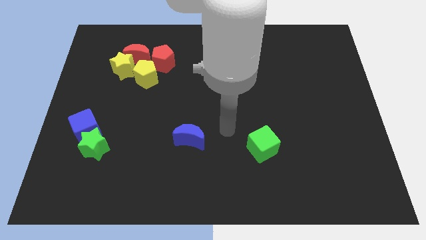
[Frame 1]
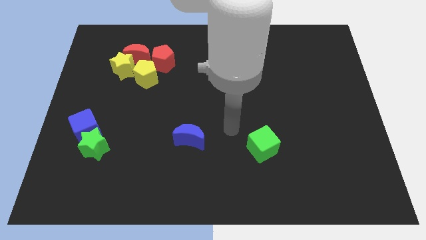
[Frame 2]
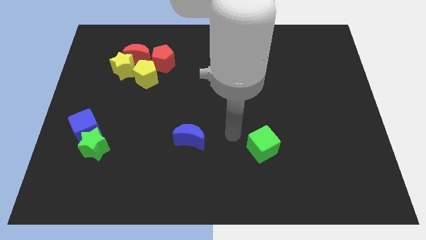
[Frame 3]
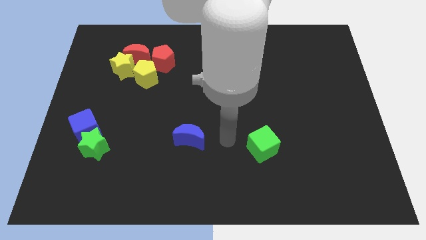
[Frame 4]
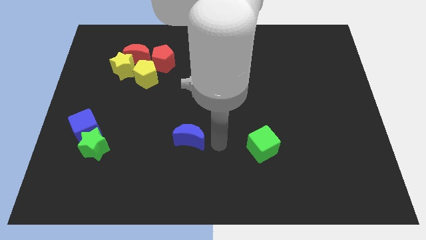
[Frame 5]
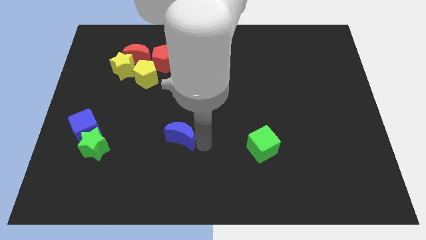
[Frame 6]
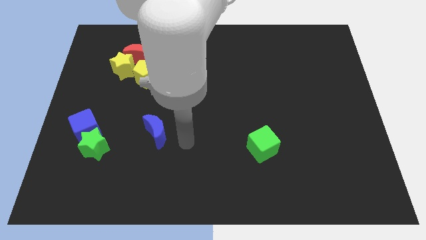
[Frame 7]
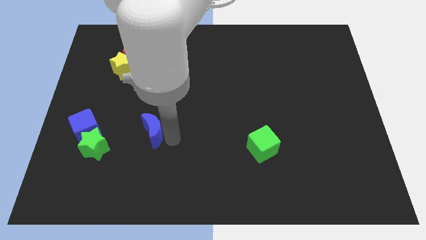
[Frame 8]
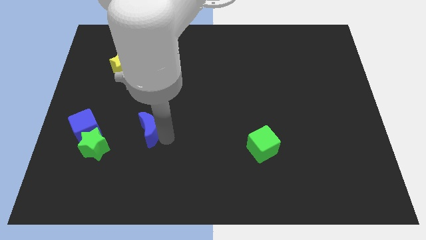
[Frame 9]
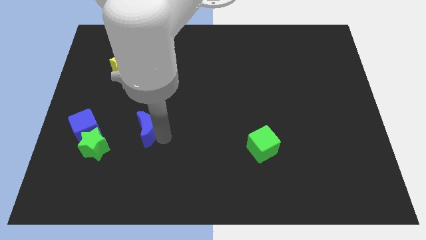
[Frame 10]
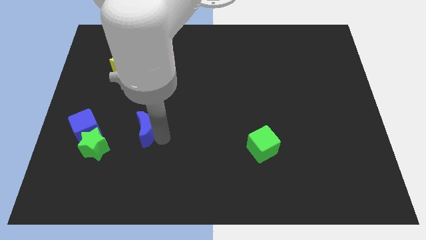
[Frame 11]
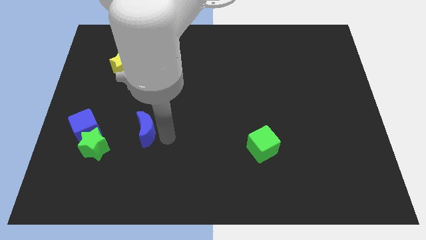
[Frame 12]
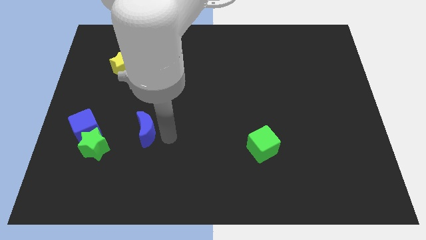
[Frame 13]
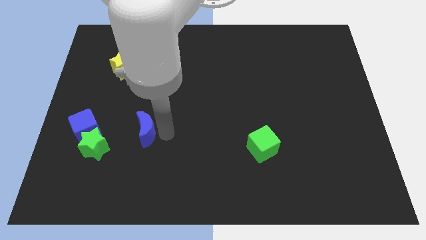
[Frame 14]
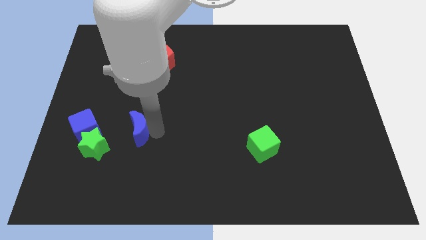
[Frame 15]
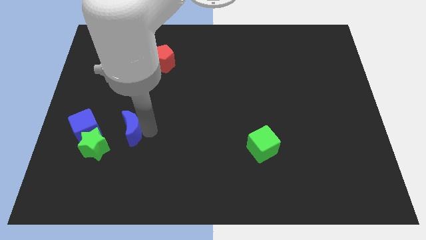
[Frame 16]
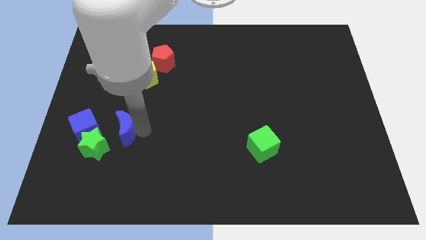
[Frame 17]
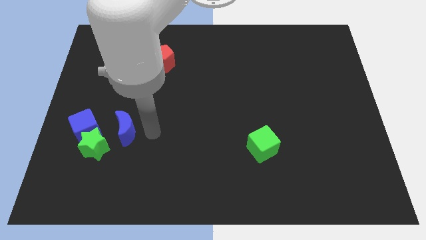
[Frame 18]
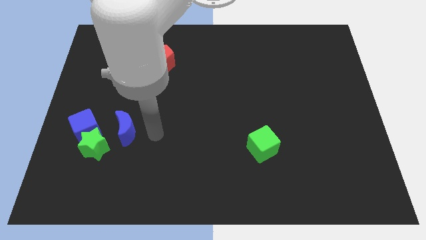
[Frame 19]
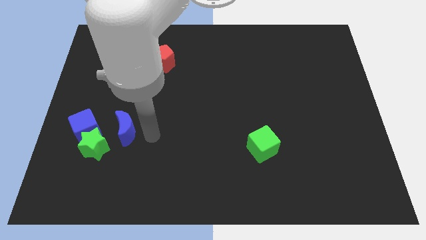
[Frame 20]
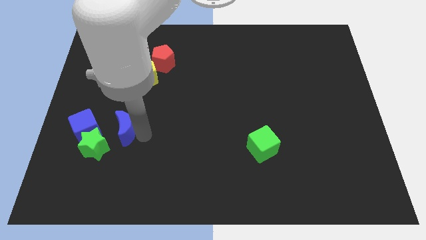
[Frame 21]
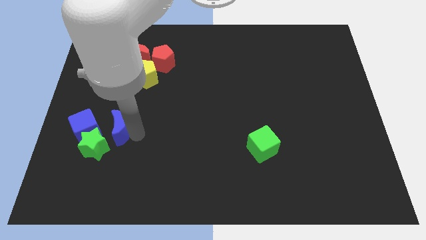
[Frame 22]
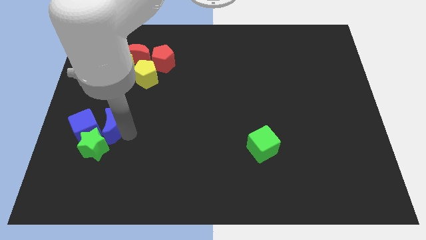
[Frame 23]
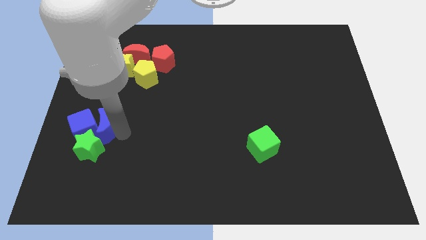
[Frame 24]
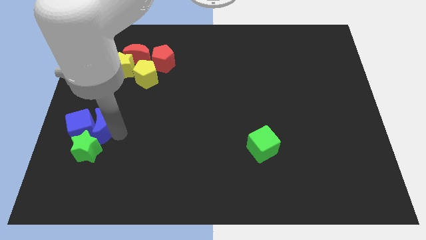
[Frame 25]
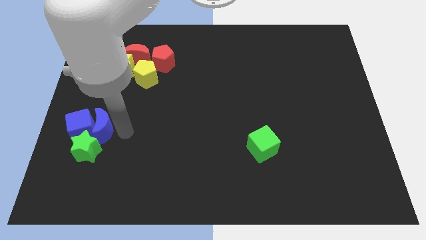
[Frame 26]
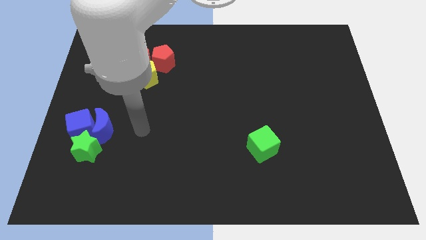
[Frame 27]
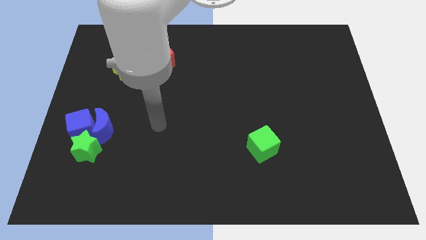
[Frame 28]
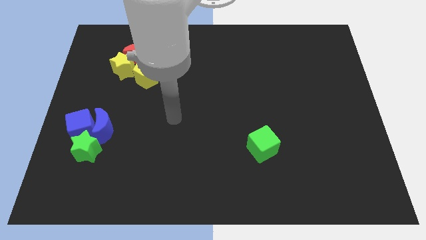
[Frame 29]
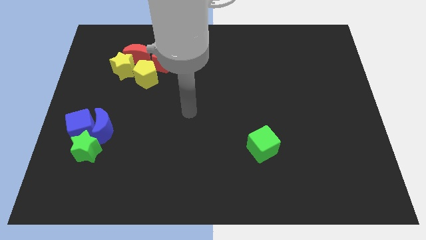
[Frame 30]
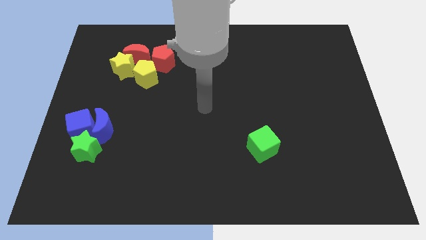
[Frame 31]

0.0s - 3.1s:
move blue moon to the right of blue cube

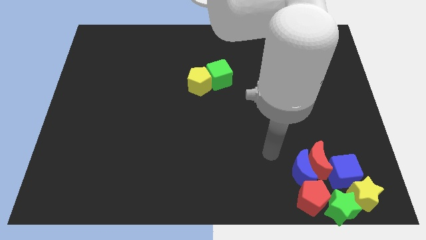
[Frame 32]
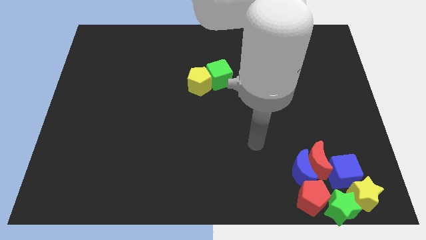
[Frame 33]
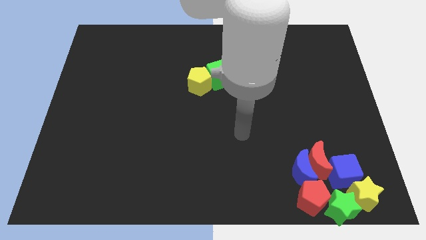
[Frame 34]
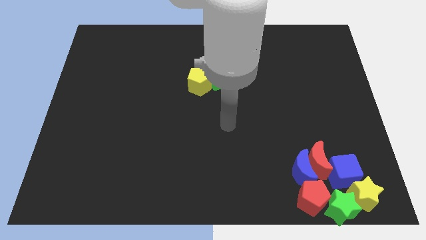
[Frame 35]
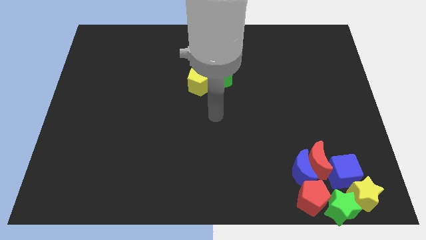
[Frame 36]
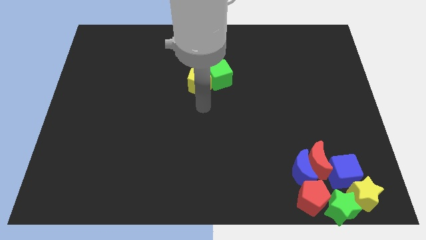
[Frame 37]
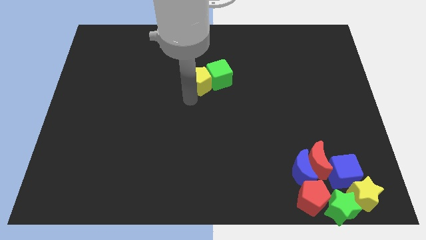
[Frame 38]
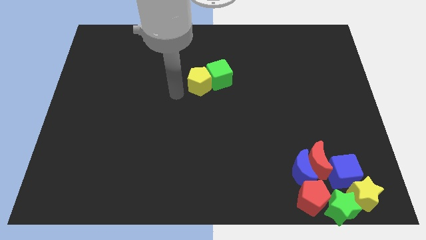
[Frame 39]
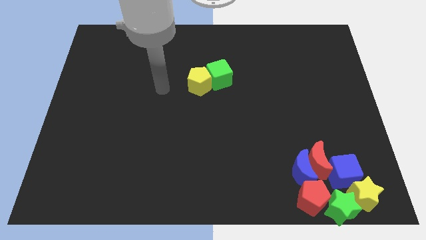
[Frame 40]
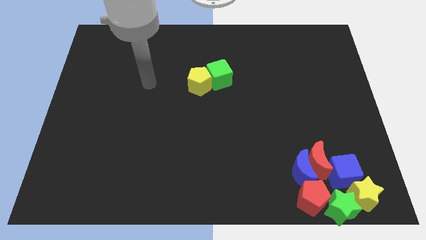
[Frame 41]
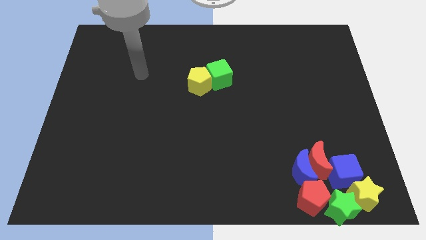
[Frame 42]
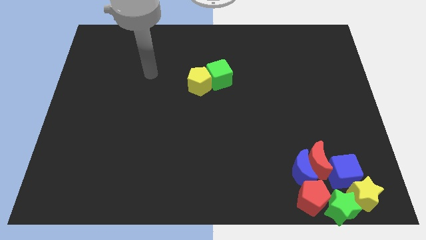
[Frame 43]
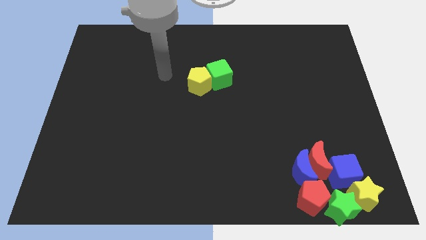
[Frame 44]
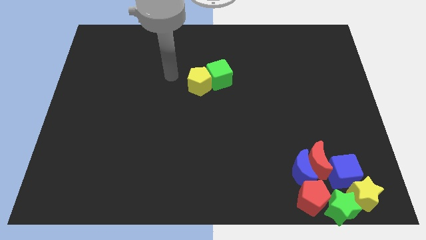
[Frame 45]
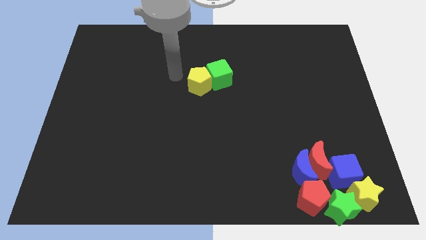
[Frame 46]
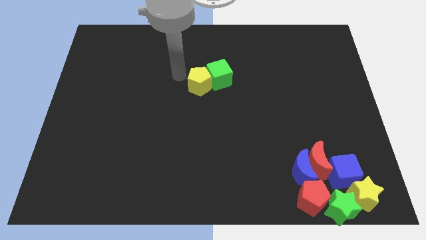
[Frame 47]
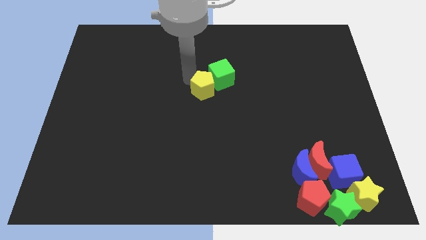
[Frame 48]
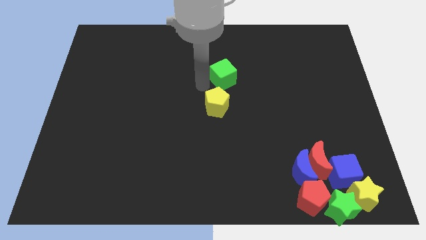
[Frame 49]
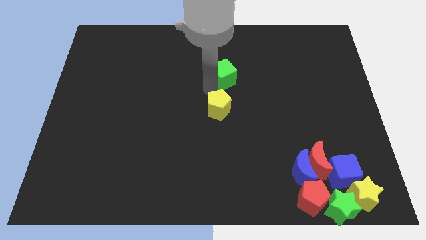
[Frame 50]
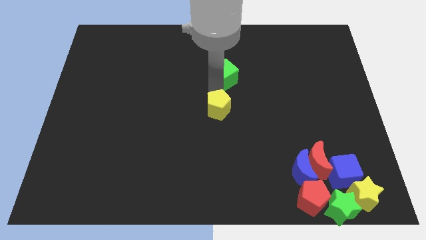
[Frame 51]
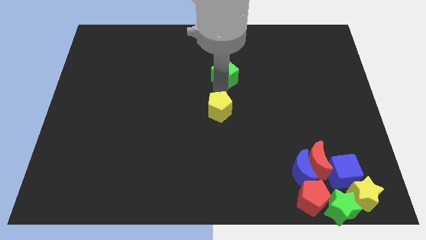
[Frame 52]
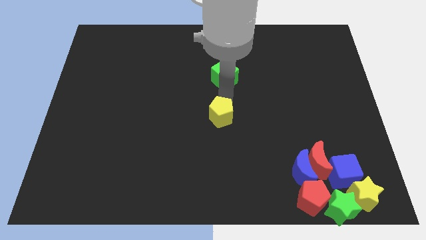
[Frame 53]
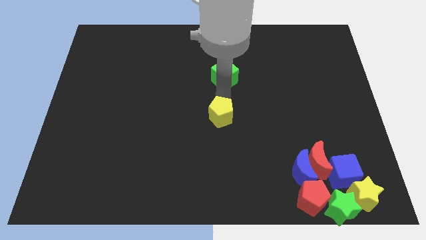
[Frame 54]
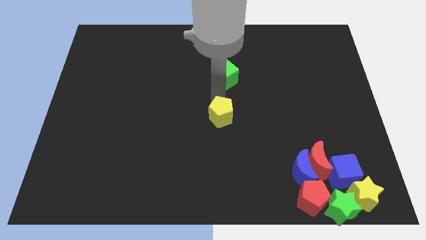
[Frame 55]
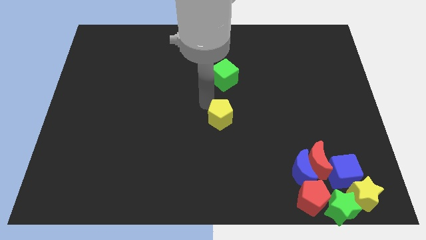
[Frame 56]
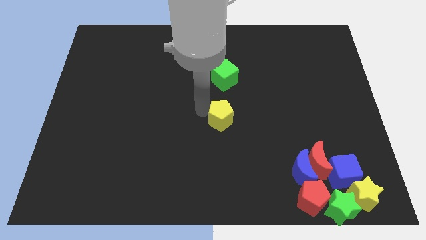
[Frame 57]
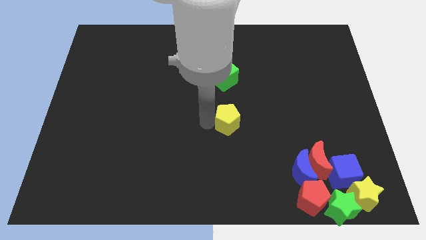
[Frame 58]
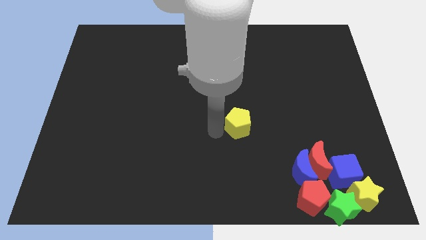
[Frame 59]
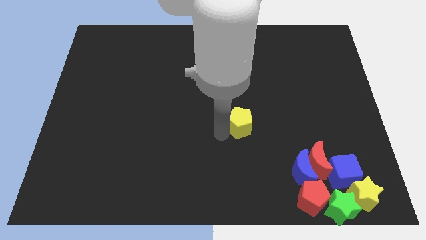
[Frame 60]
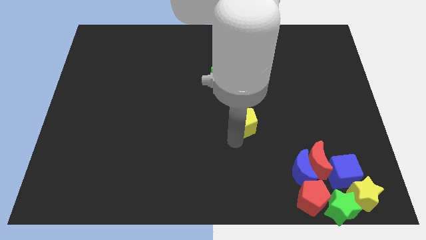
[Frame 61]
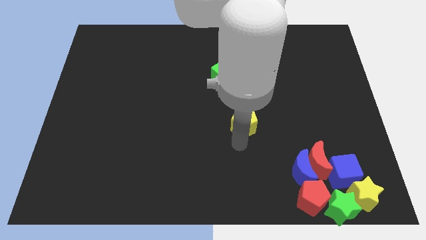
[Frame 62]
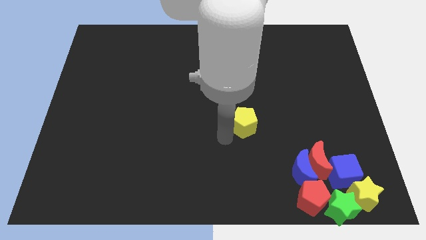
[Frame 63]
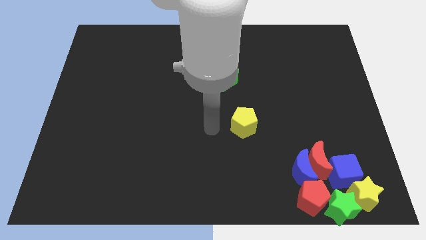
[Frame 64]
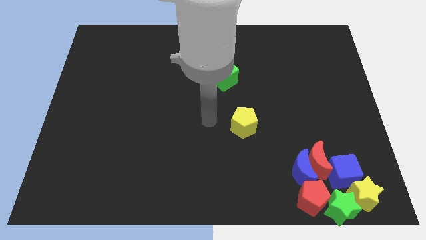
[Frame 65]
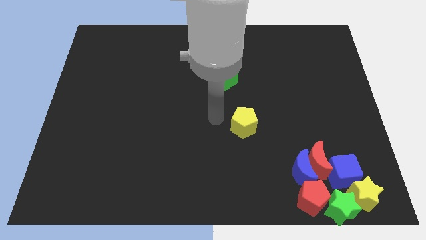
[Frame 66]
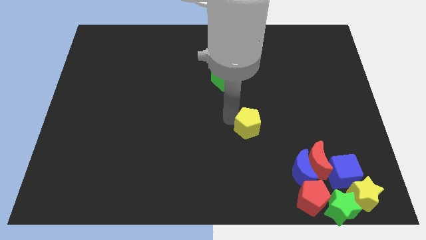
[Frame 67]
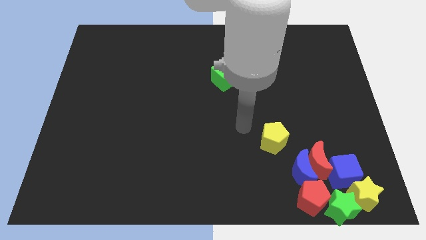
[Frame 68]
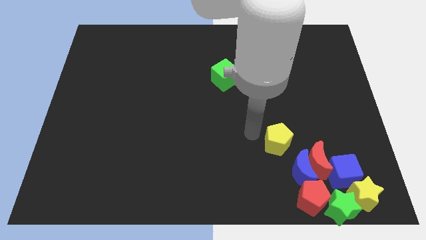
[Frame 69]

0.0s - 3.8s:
move the yellow pentagon towards the group of blocks

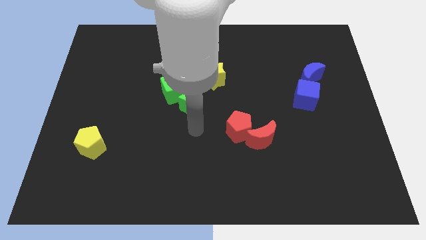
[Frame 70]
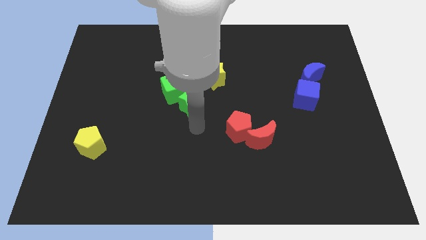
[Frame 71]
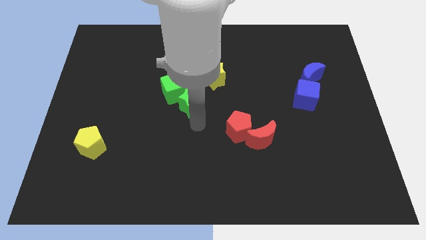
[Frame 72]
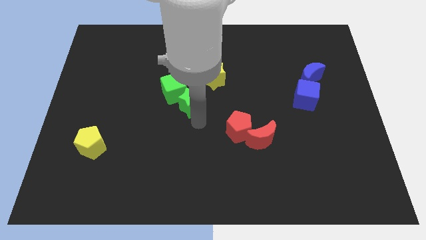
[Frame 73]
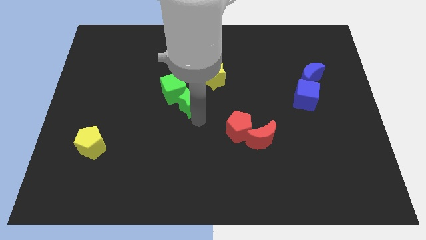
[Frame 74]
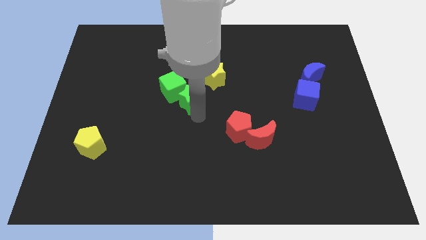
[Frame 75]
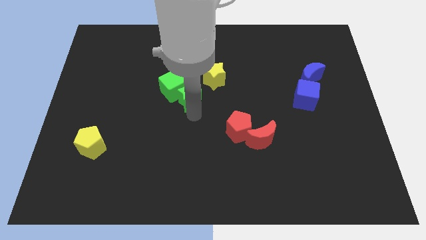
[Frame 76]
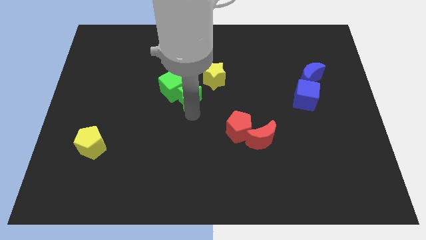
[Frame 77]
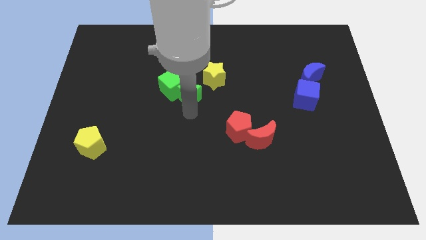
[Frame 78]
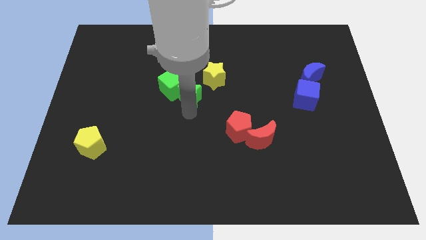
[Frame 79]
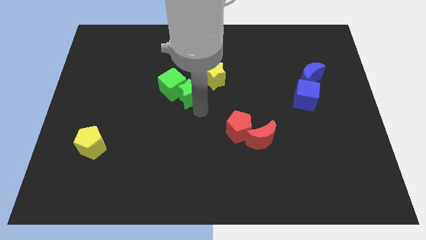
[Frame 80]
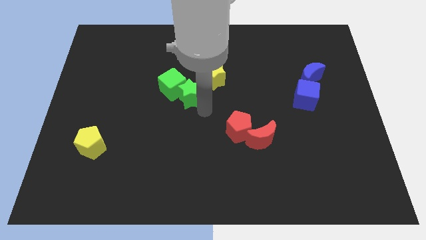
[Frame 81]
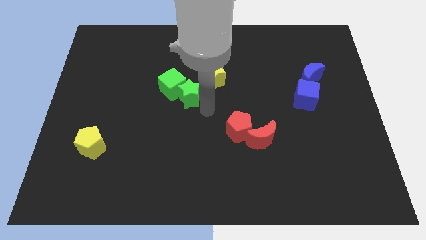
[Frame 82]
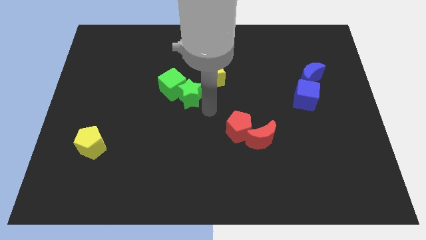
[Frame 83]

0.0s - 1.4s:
push the green star into the green cube

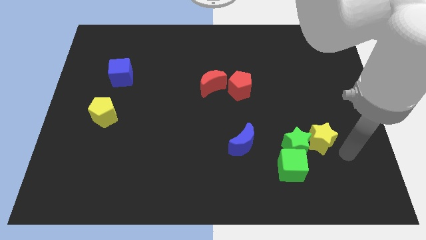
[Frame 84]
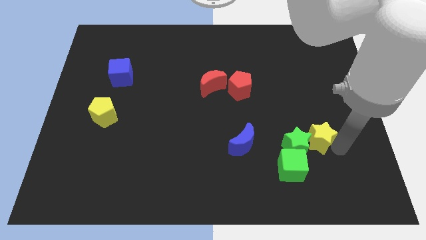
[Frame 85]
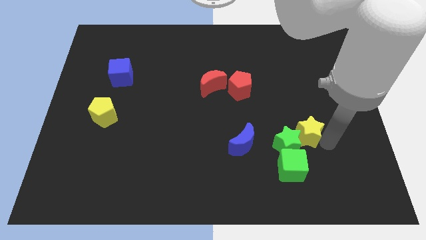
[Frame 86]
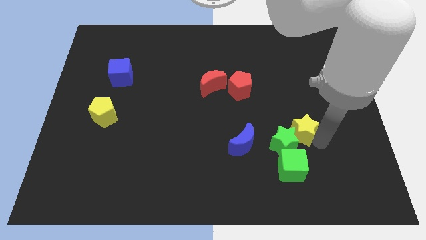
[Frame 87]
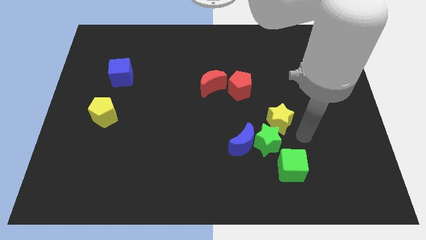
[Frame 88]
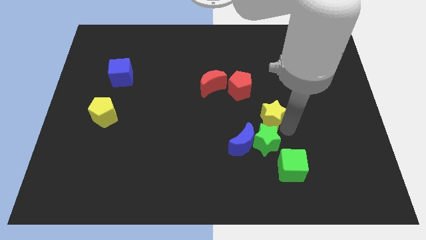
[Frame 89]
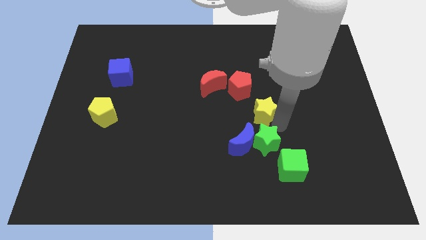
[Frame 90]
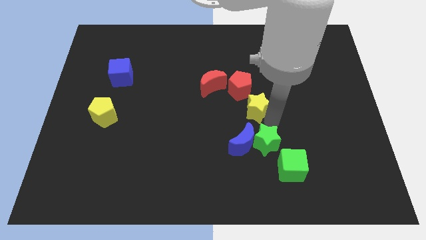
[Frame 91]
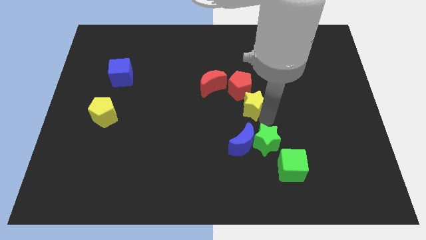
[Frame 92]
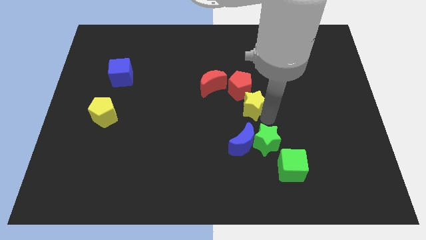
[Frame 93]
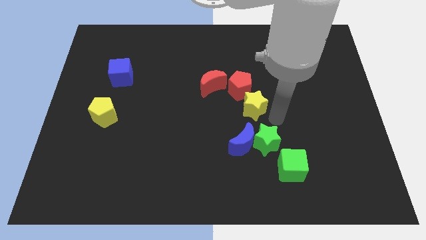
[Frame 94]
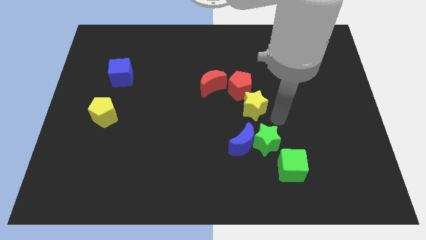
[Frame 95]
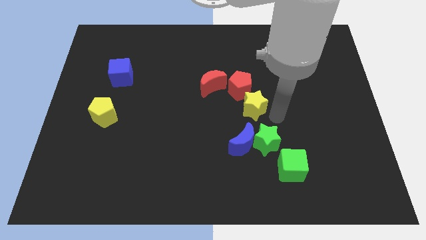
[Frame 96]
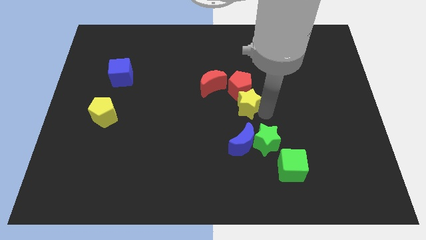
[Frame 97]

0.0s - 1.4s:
move the yellow star below the red pentagon
